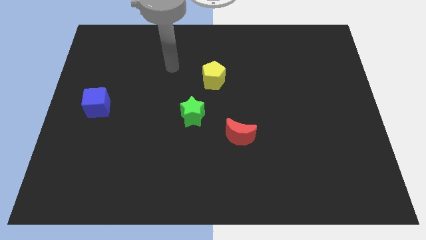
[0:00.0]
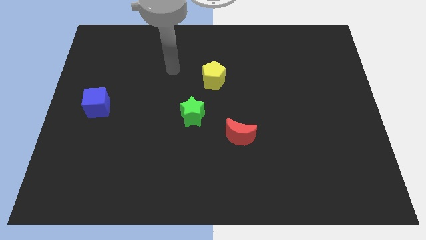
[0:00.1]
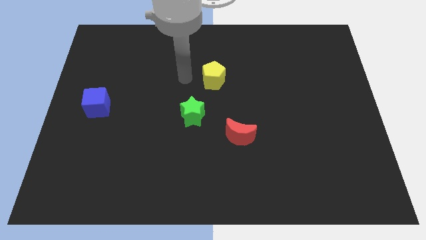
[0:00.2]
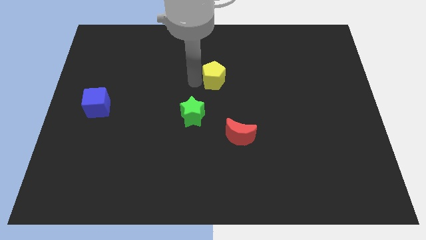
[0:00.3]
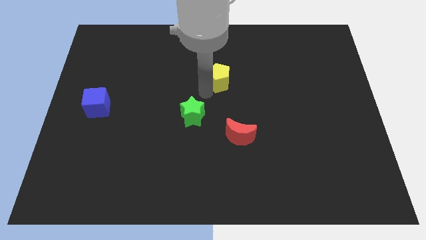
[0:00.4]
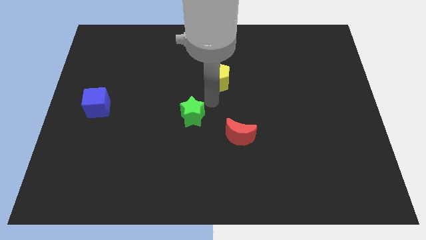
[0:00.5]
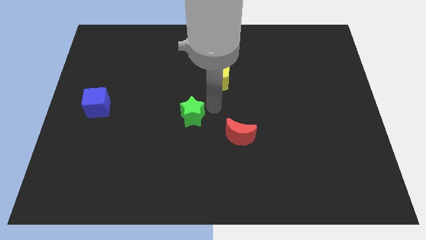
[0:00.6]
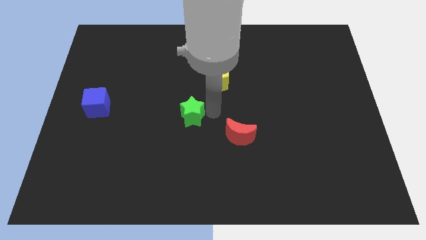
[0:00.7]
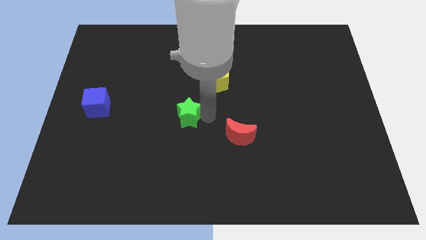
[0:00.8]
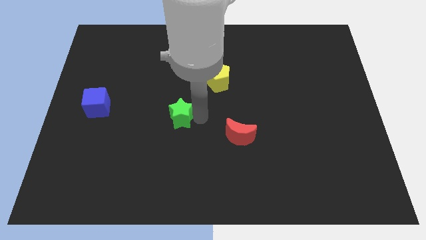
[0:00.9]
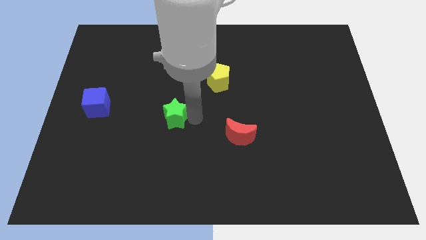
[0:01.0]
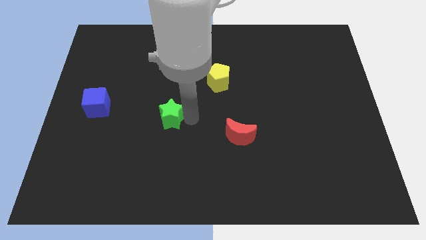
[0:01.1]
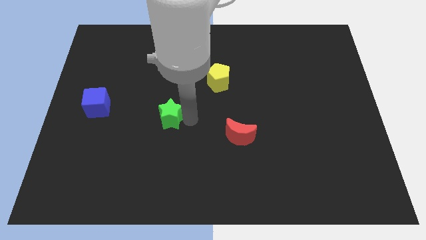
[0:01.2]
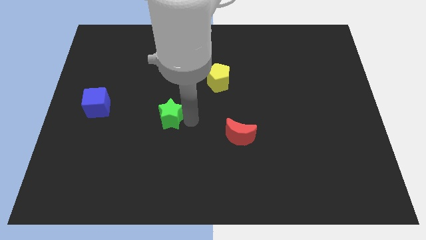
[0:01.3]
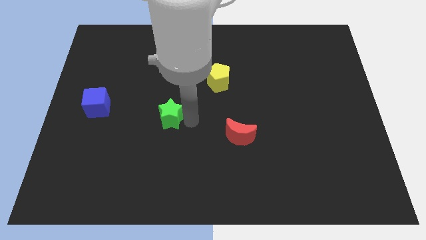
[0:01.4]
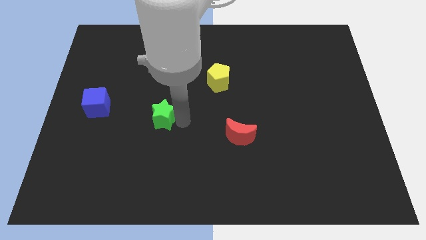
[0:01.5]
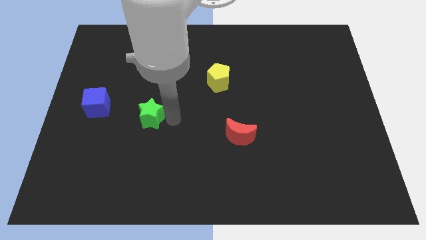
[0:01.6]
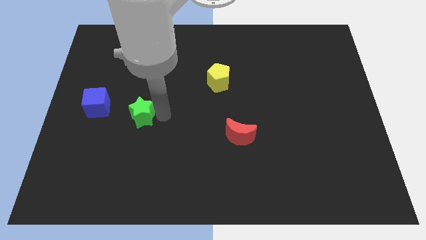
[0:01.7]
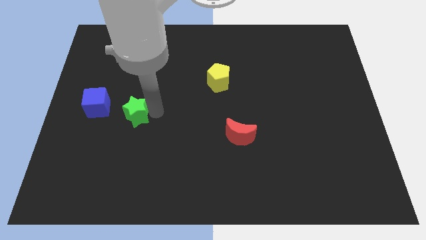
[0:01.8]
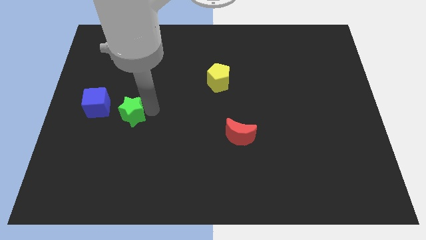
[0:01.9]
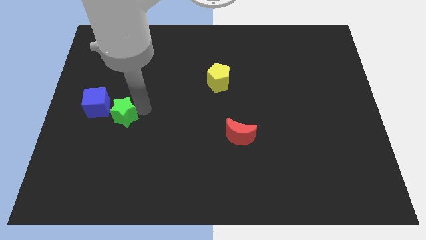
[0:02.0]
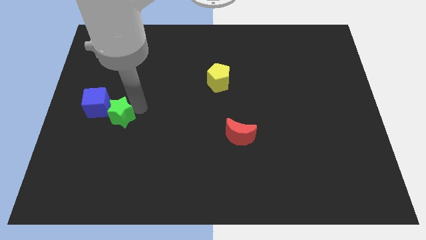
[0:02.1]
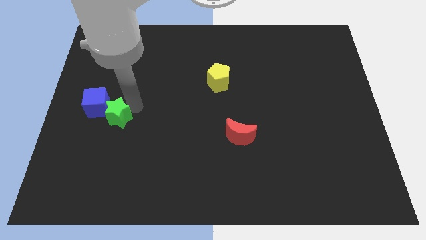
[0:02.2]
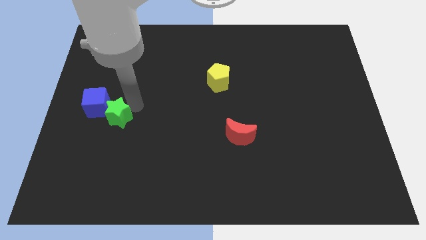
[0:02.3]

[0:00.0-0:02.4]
push the green block close to the blue block

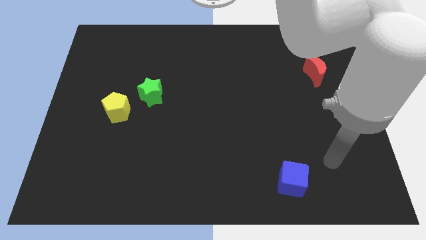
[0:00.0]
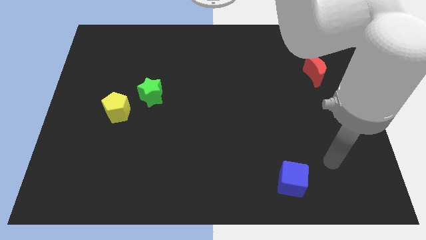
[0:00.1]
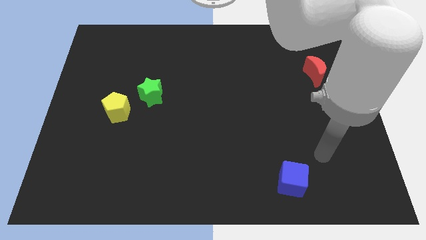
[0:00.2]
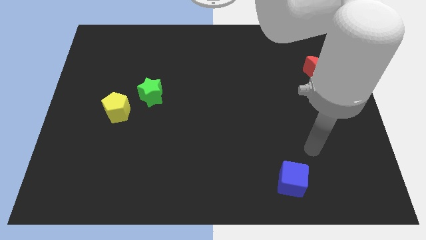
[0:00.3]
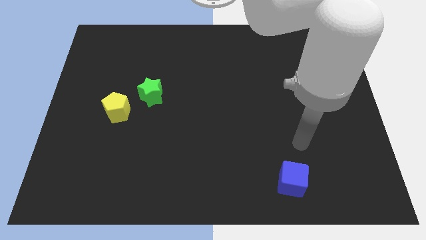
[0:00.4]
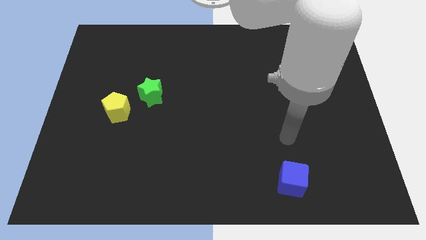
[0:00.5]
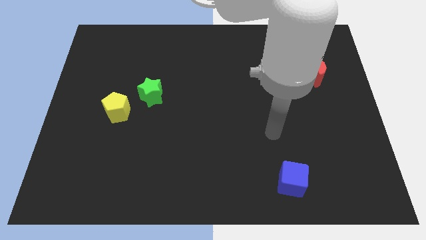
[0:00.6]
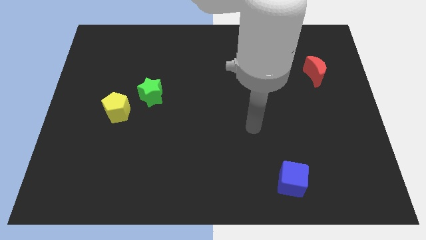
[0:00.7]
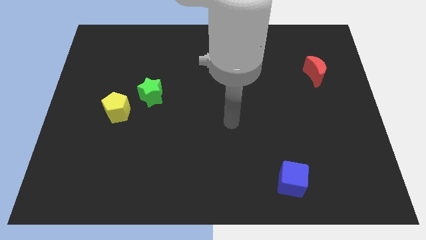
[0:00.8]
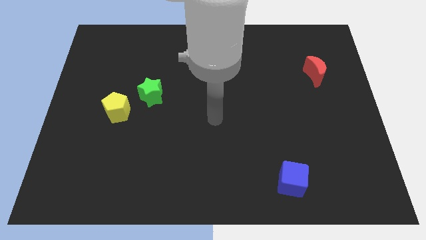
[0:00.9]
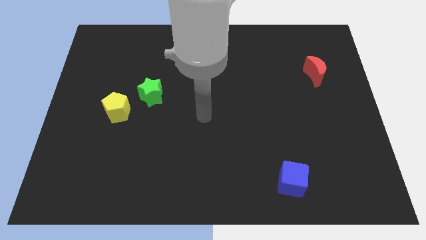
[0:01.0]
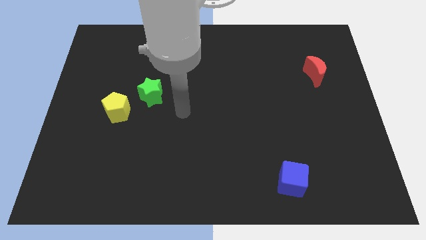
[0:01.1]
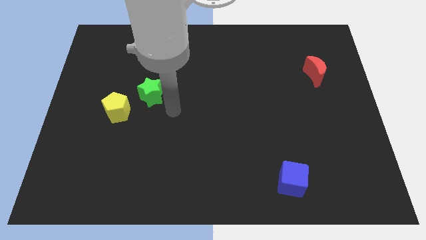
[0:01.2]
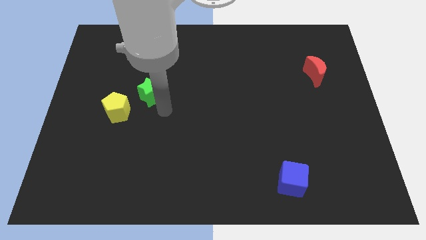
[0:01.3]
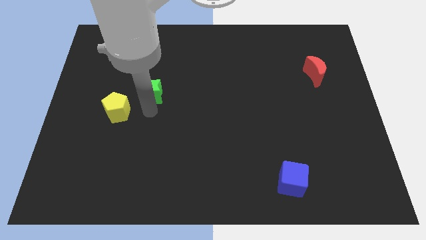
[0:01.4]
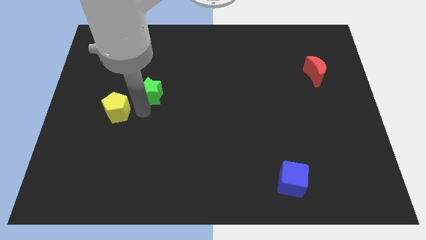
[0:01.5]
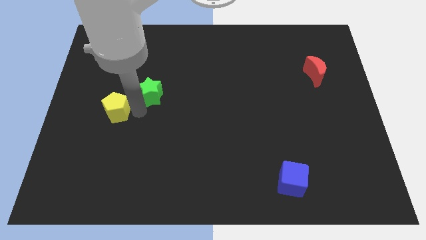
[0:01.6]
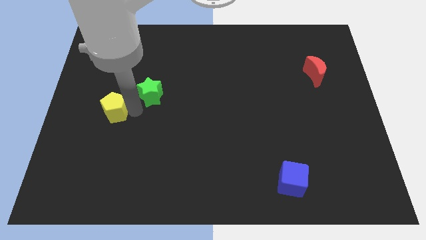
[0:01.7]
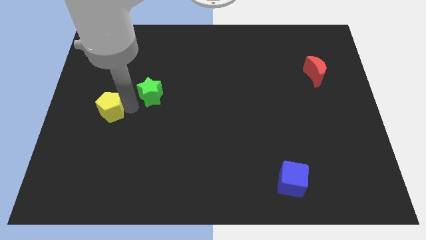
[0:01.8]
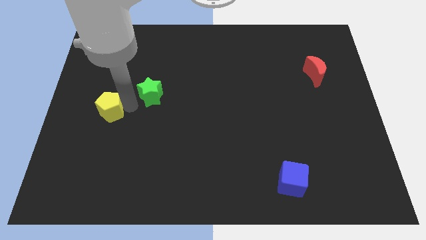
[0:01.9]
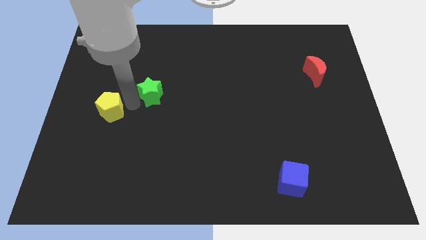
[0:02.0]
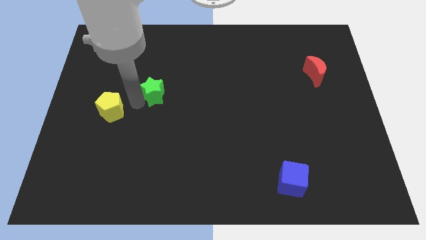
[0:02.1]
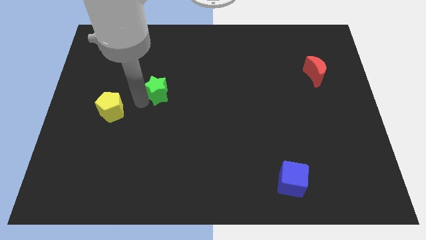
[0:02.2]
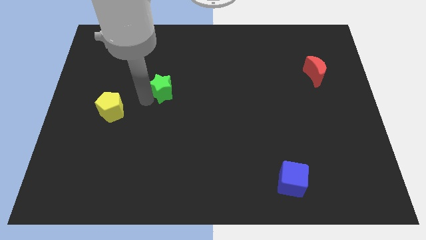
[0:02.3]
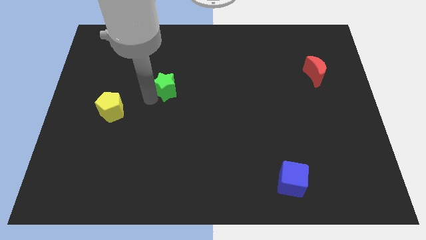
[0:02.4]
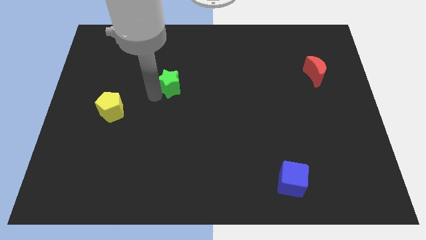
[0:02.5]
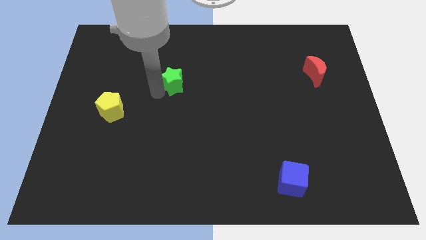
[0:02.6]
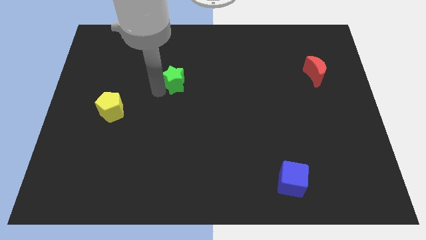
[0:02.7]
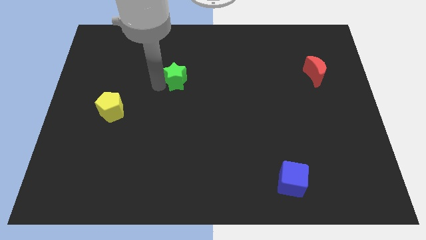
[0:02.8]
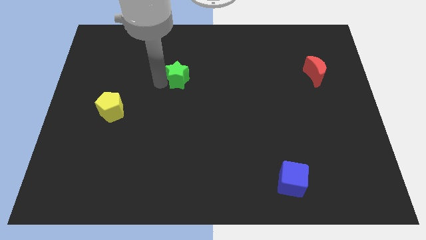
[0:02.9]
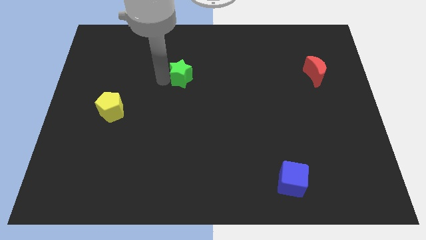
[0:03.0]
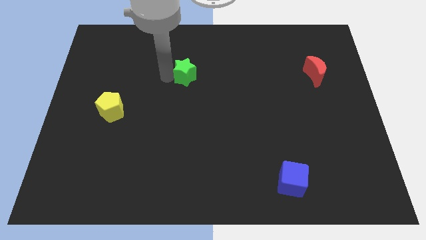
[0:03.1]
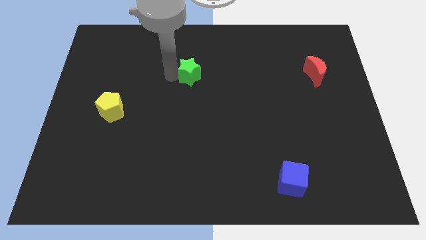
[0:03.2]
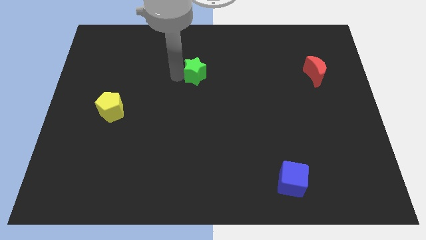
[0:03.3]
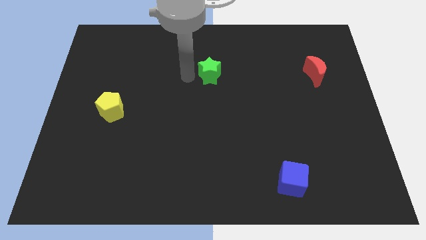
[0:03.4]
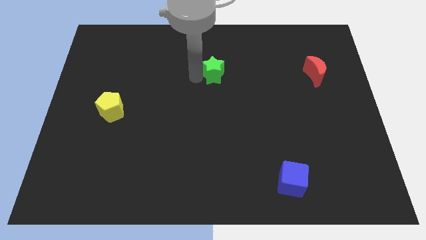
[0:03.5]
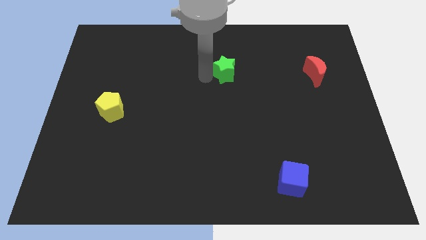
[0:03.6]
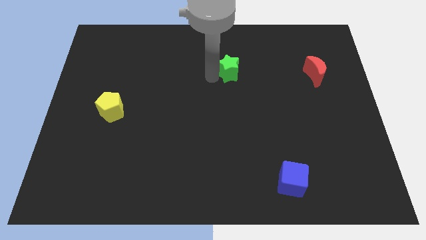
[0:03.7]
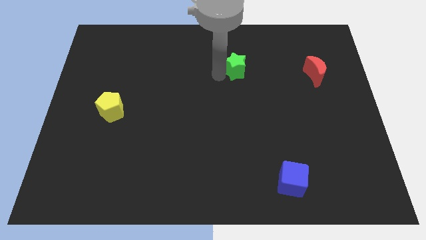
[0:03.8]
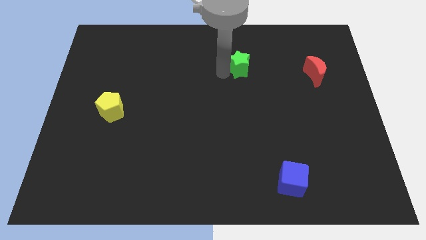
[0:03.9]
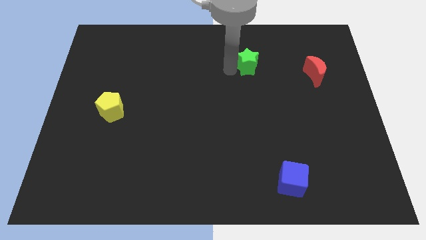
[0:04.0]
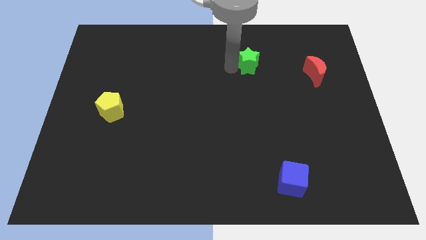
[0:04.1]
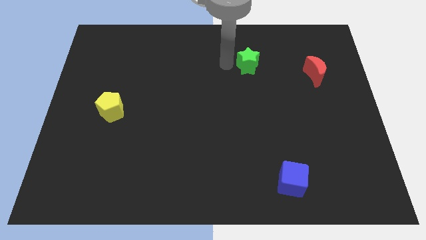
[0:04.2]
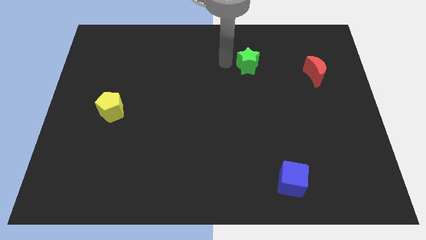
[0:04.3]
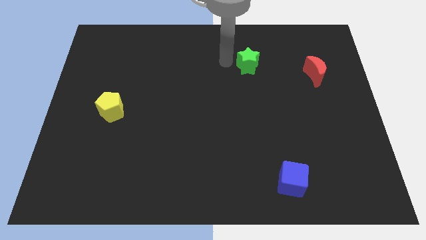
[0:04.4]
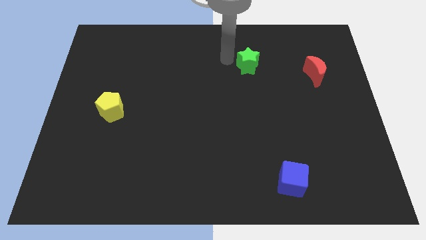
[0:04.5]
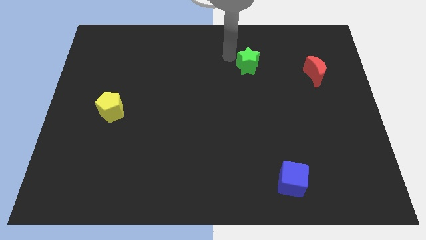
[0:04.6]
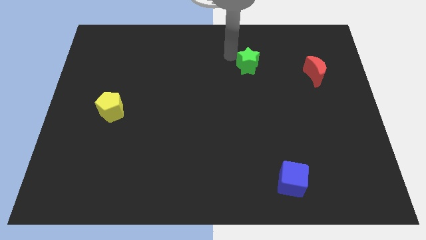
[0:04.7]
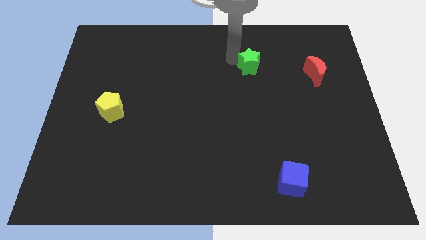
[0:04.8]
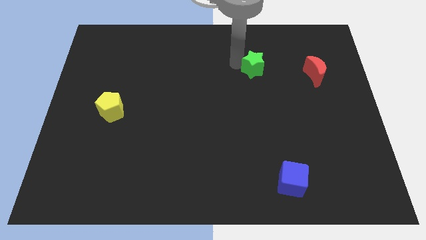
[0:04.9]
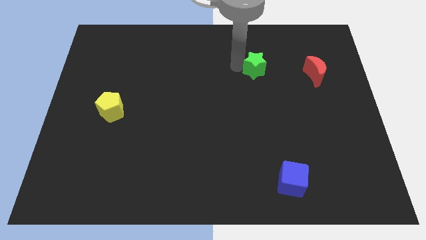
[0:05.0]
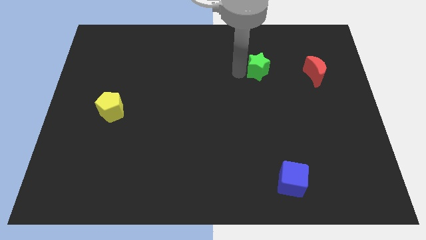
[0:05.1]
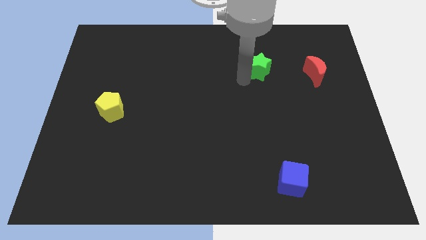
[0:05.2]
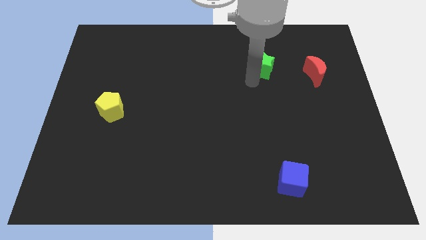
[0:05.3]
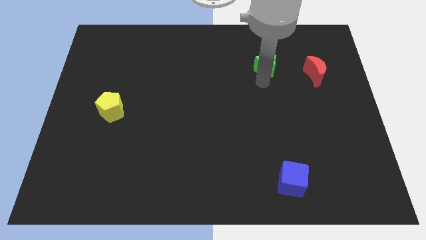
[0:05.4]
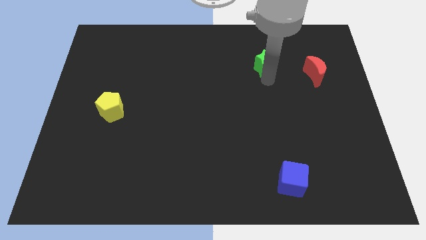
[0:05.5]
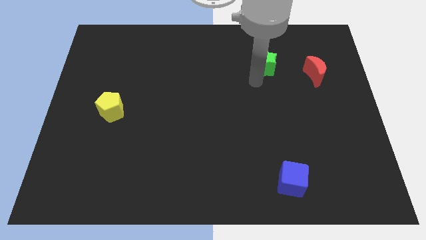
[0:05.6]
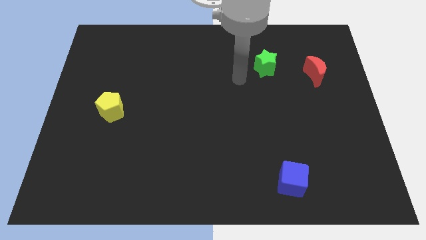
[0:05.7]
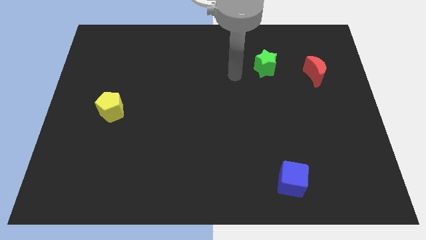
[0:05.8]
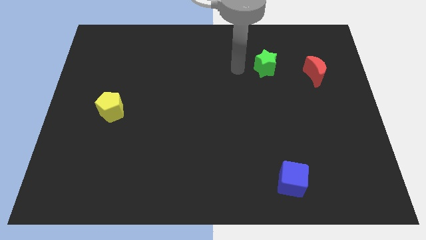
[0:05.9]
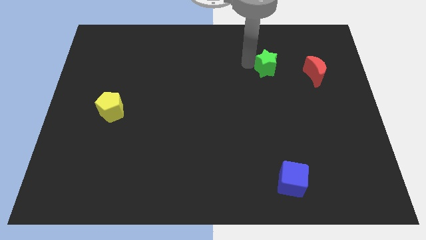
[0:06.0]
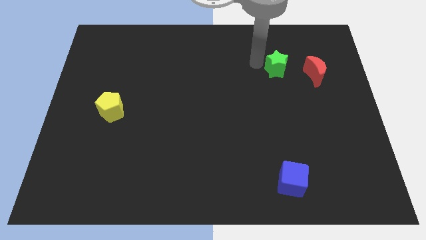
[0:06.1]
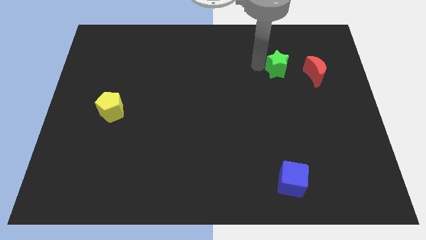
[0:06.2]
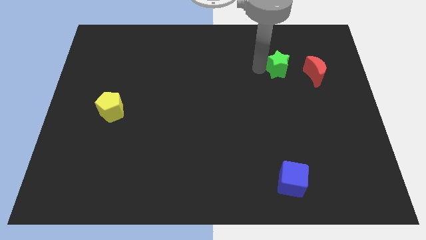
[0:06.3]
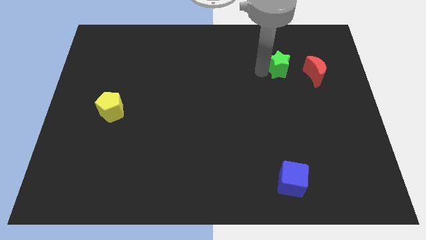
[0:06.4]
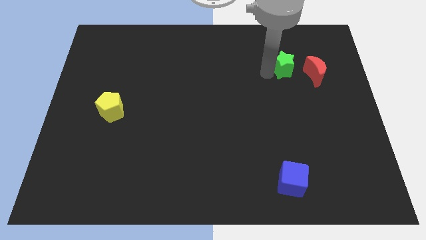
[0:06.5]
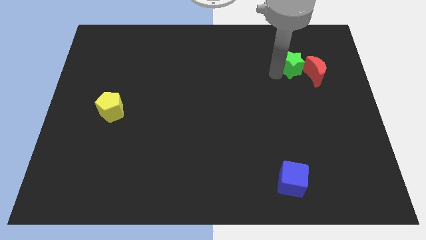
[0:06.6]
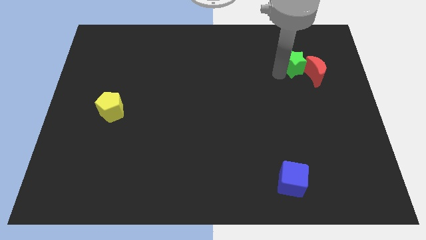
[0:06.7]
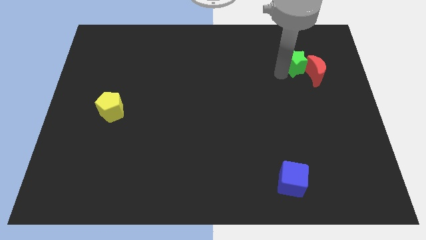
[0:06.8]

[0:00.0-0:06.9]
move the star towards the moon
